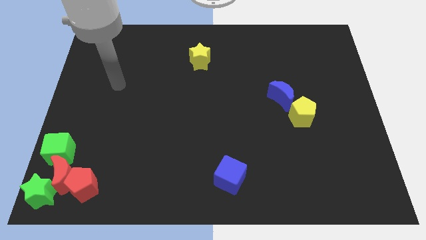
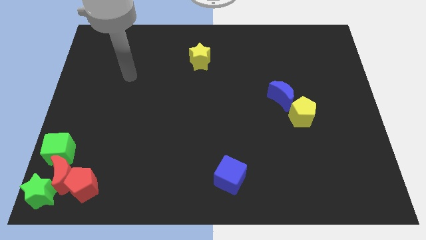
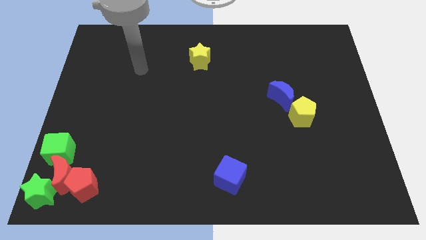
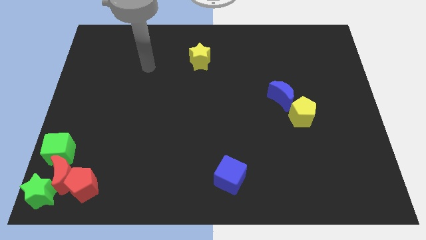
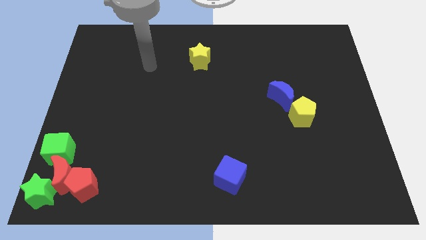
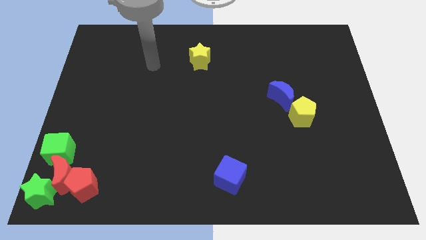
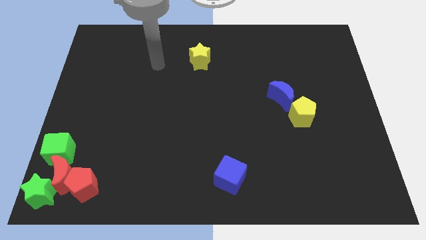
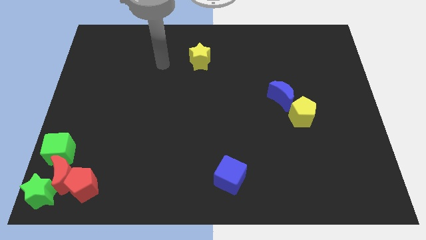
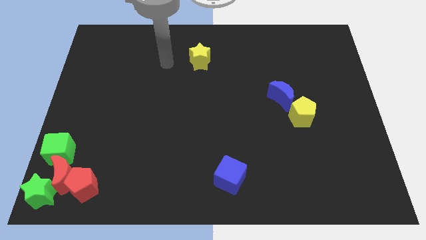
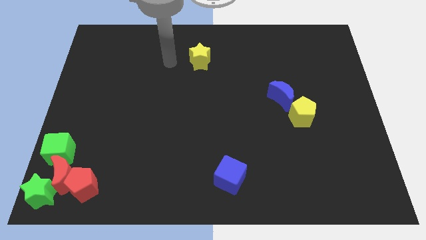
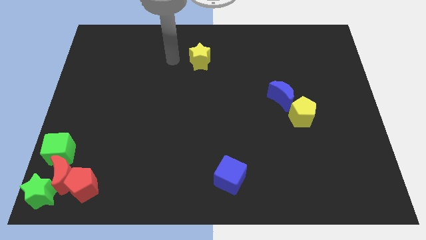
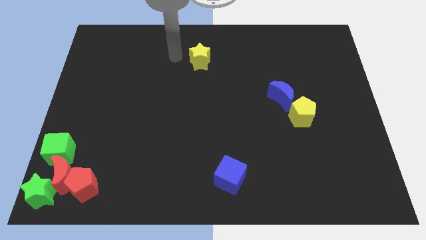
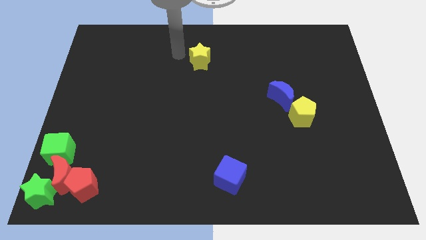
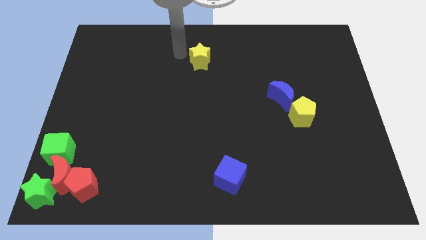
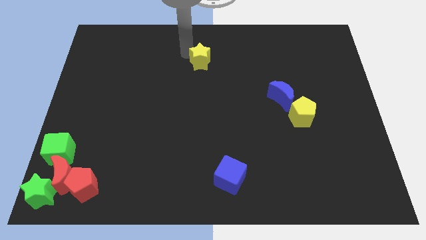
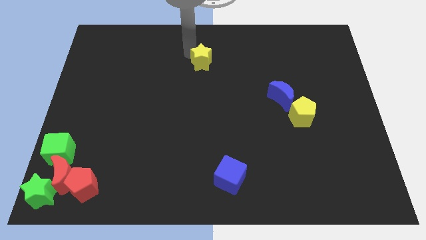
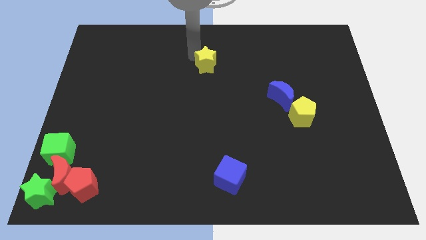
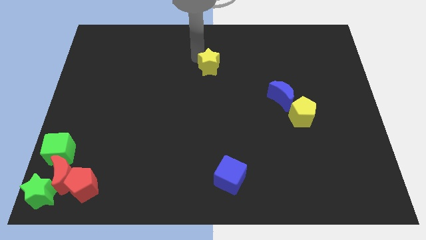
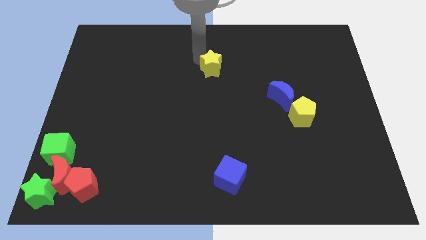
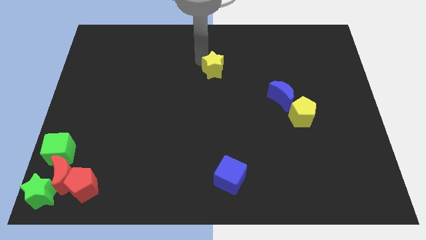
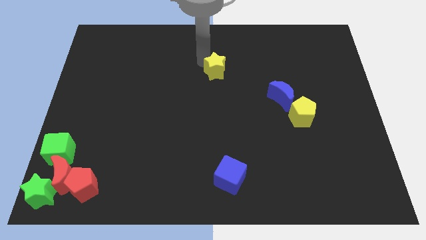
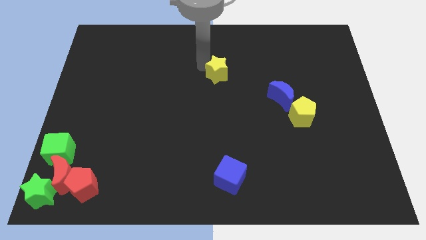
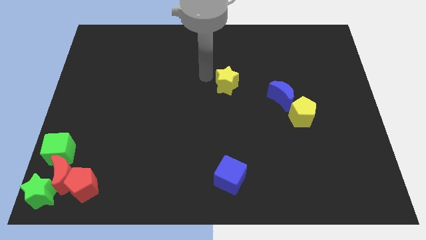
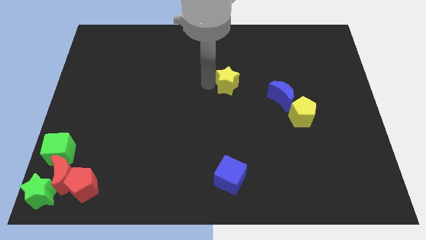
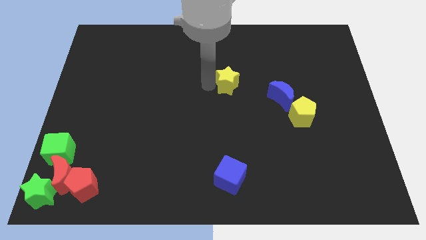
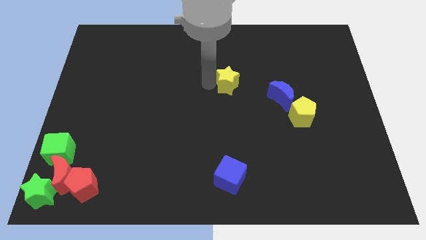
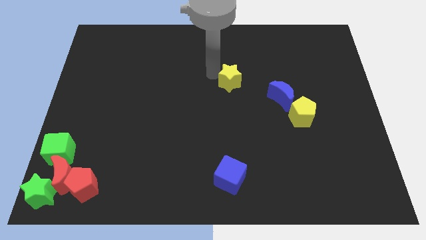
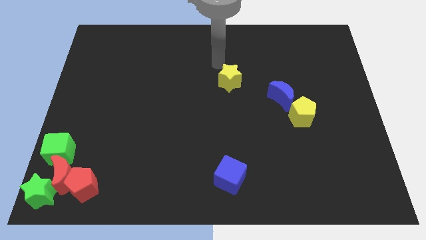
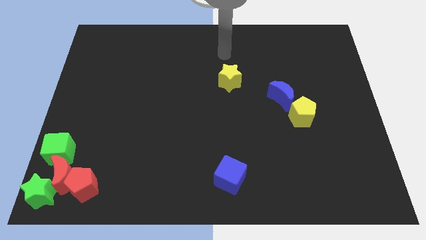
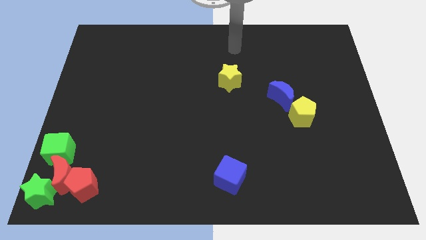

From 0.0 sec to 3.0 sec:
push yellow star slightly downwards

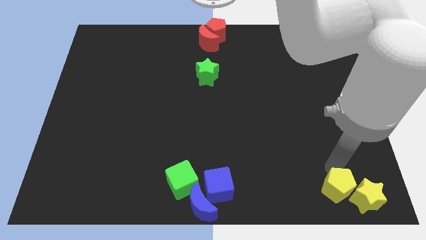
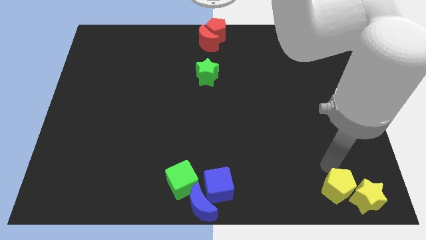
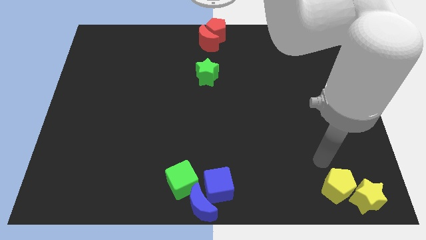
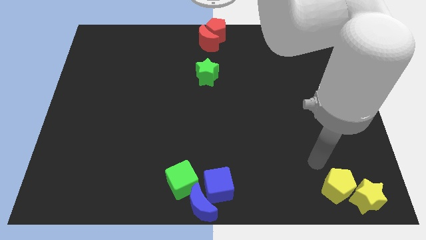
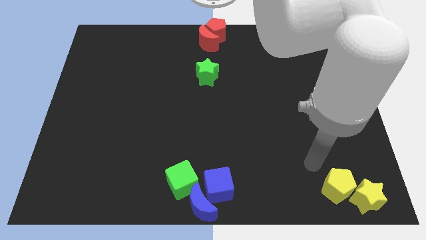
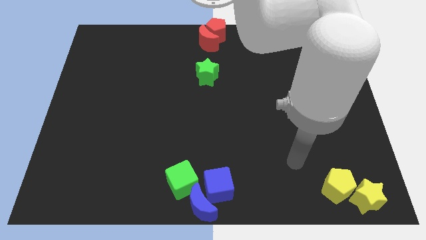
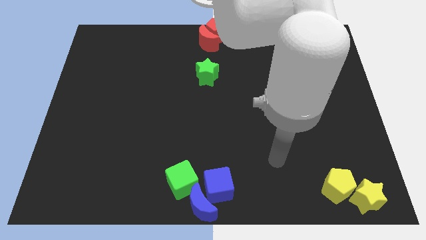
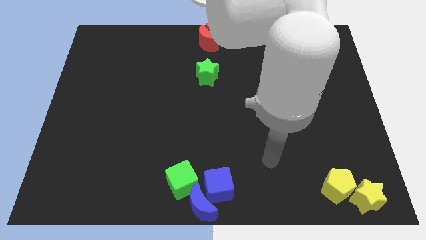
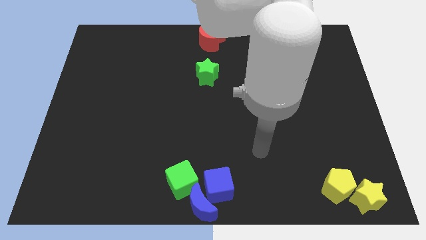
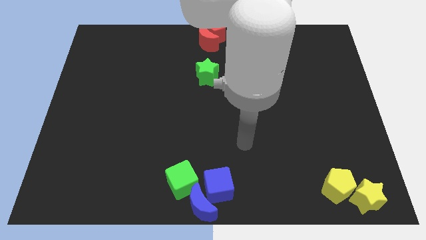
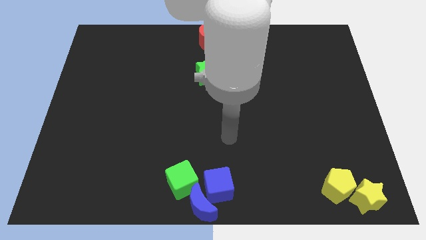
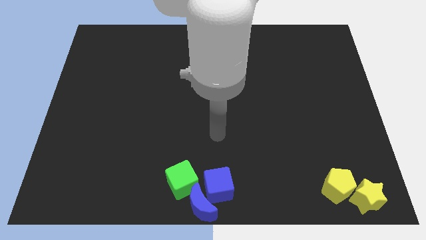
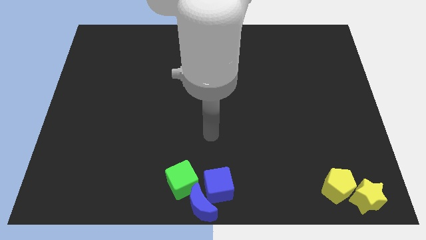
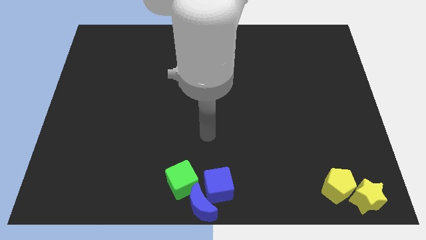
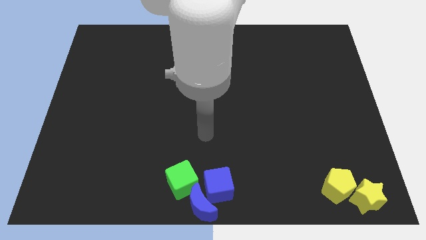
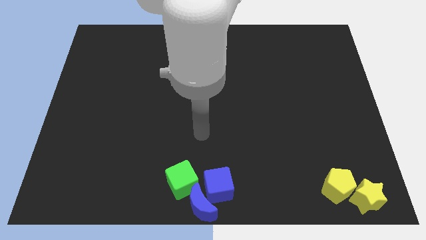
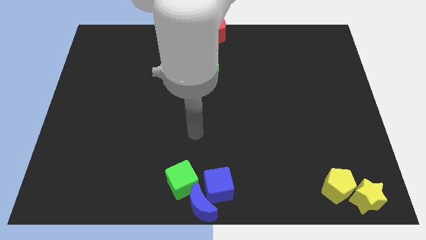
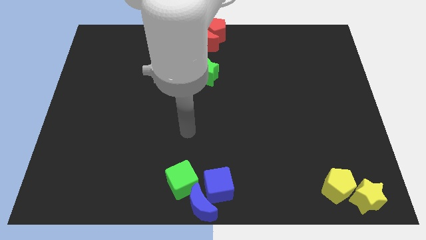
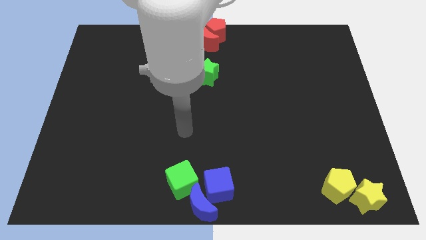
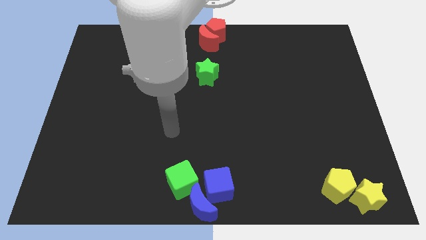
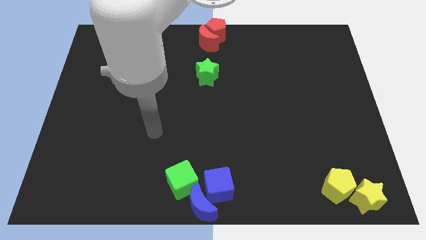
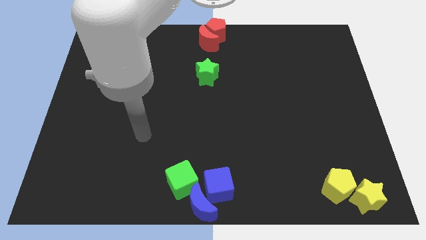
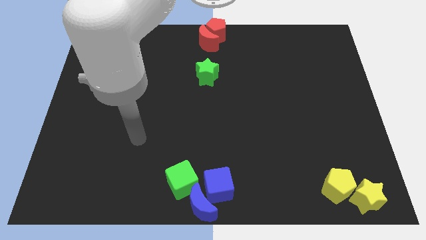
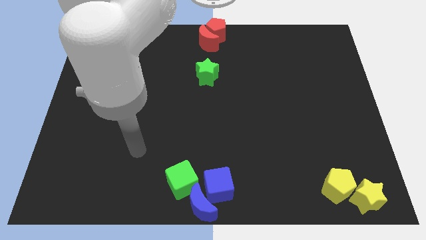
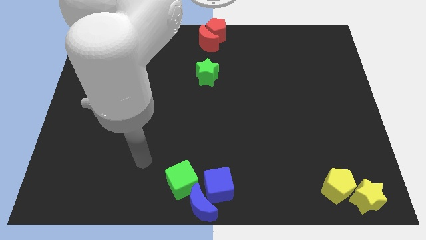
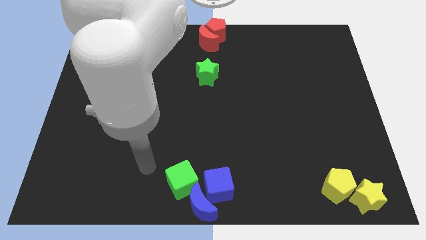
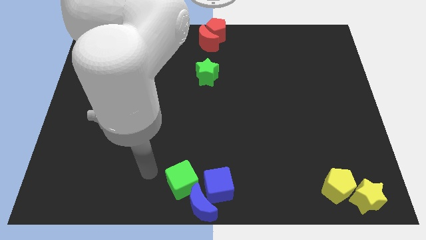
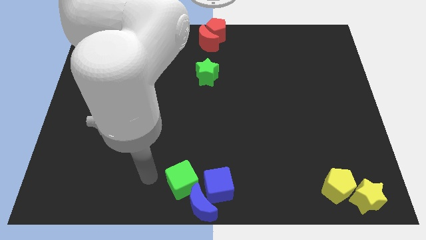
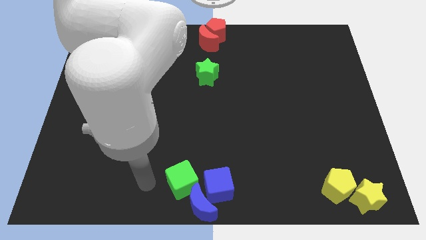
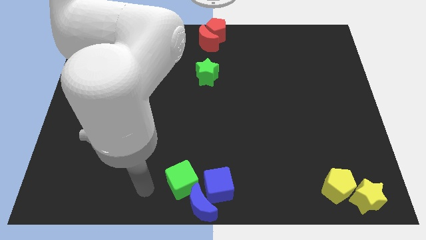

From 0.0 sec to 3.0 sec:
move the arm away from the yellow pentagon

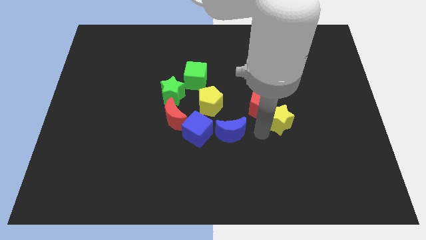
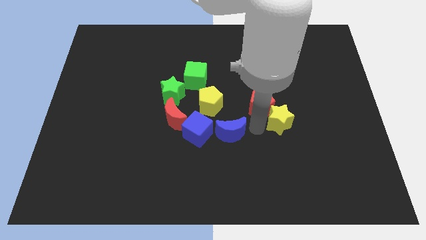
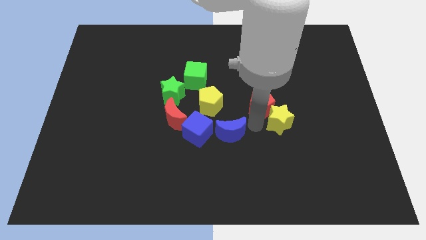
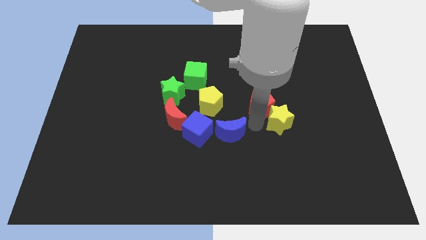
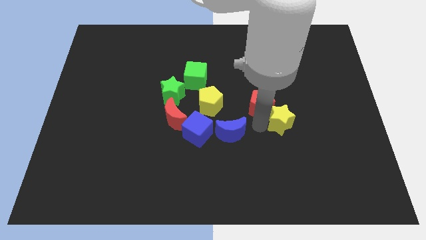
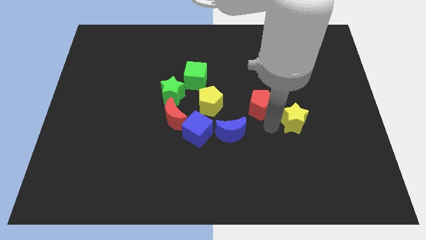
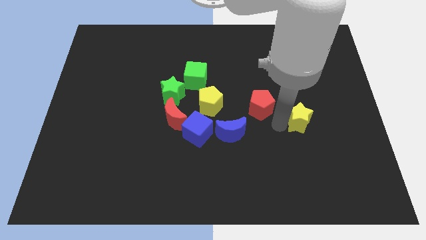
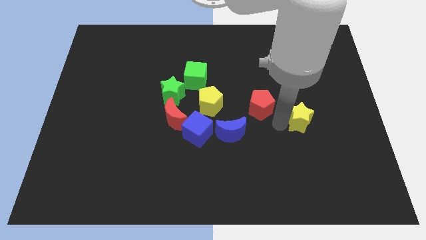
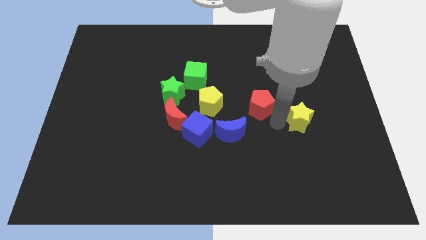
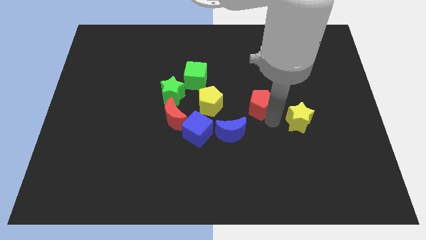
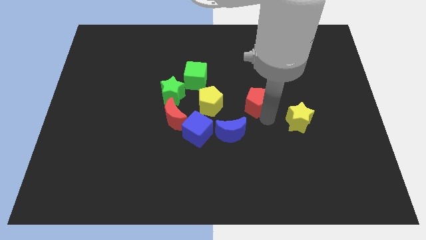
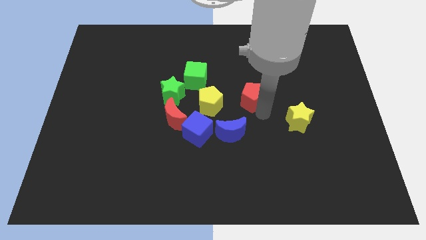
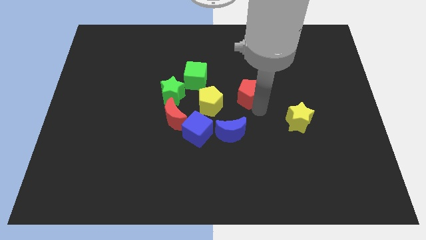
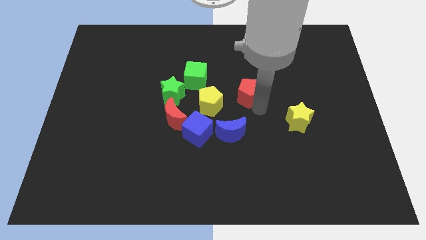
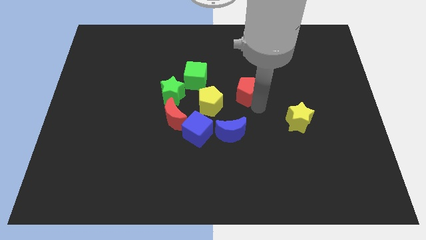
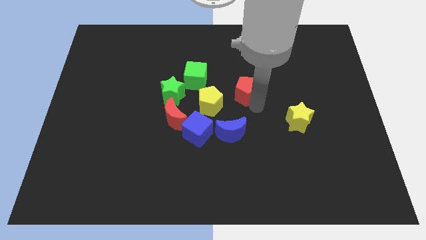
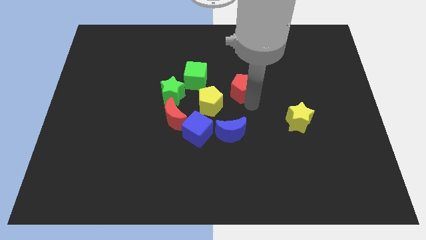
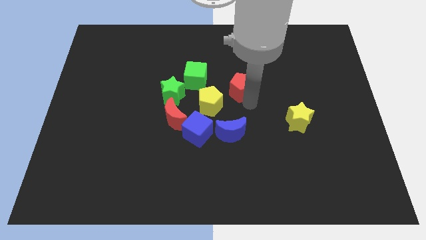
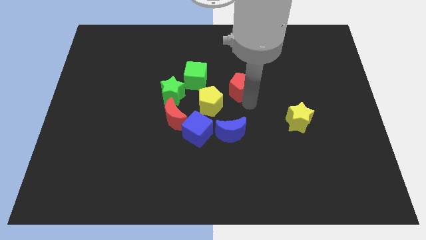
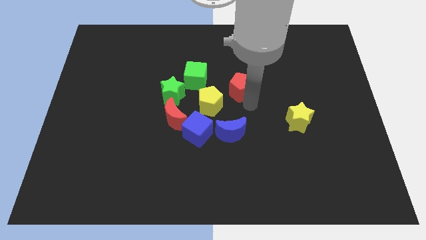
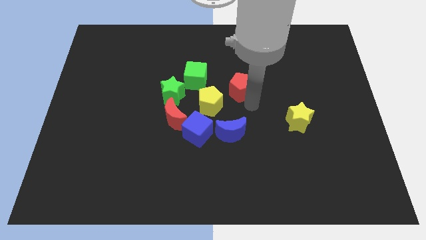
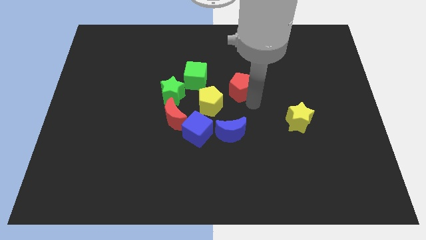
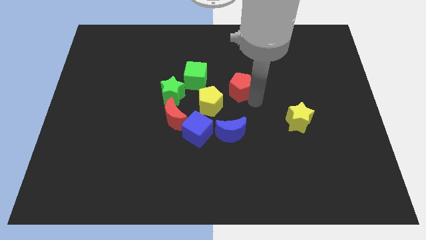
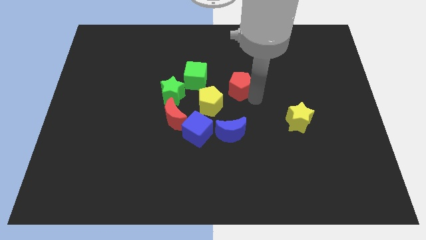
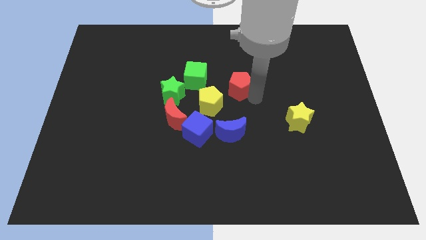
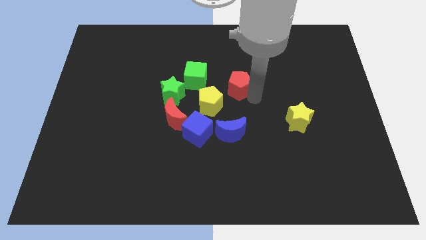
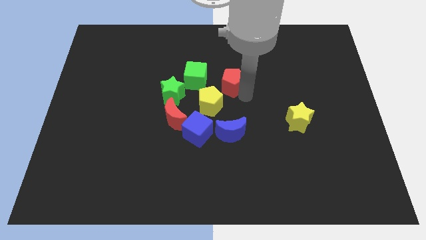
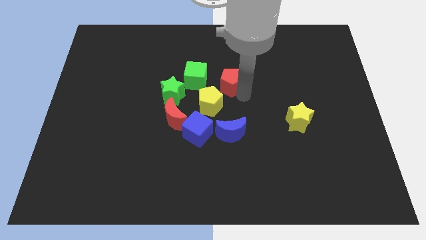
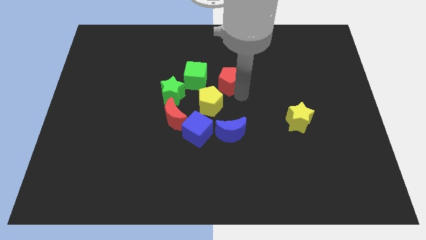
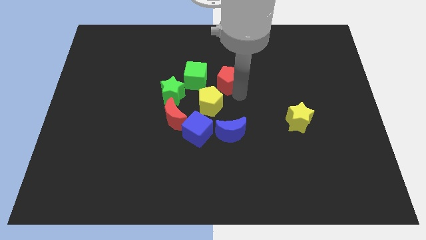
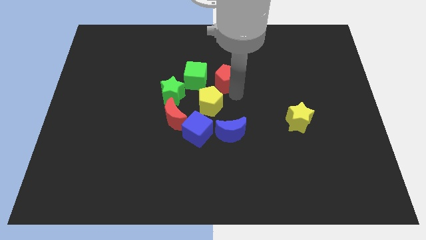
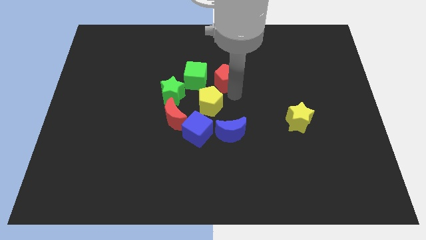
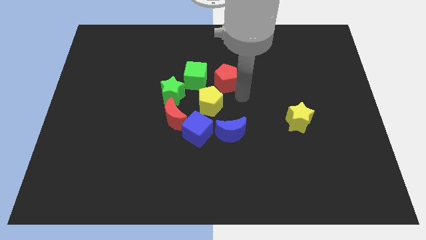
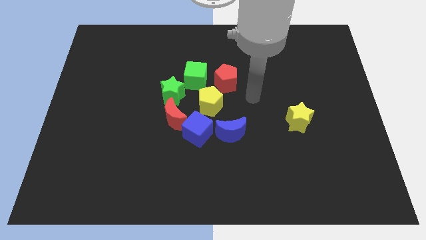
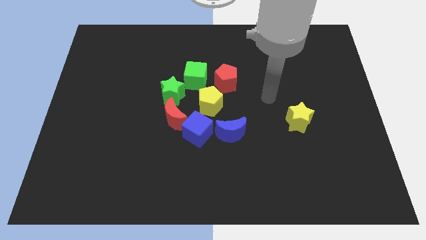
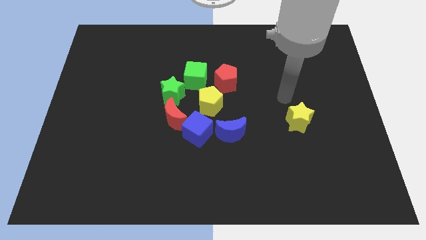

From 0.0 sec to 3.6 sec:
separate the red pentagon and the yellow star
